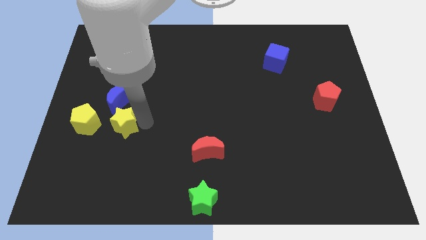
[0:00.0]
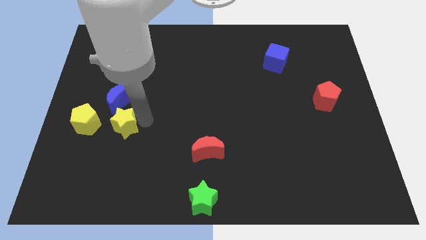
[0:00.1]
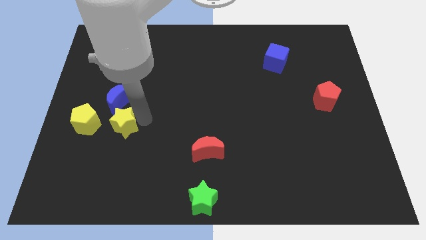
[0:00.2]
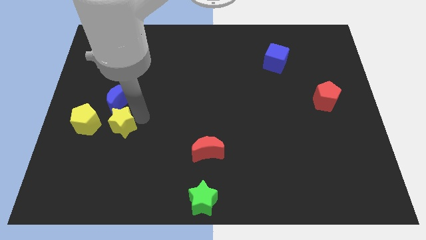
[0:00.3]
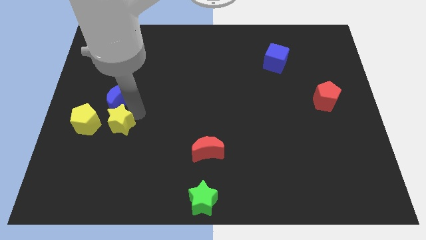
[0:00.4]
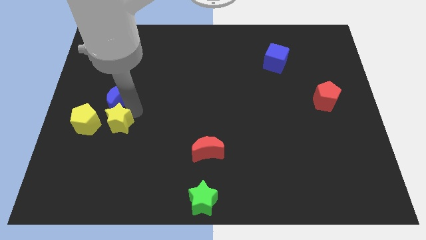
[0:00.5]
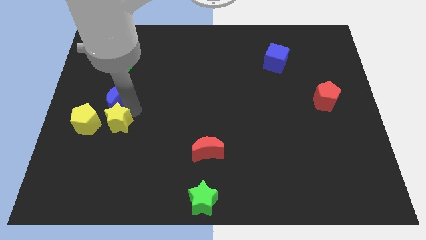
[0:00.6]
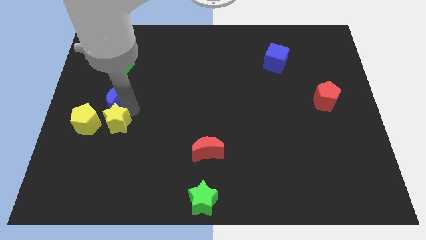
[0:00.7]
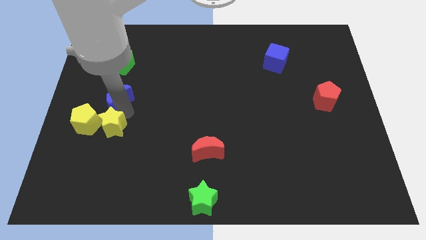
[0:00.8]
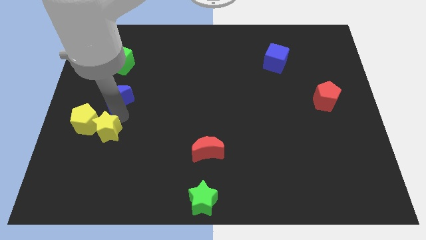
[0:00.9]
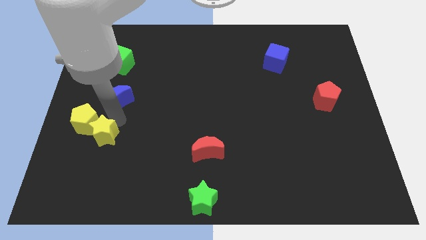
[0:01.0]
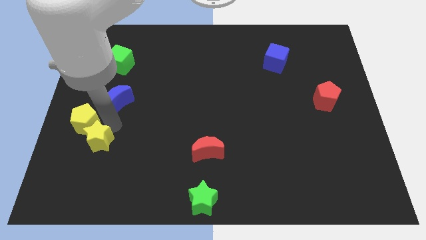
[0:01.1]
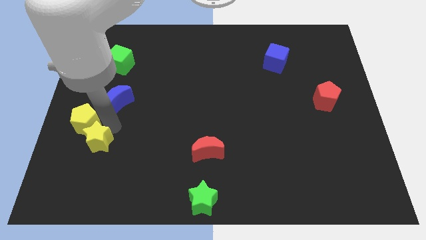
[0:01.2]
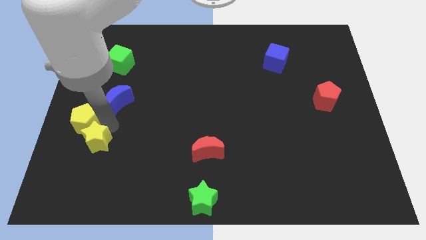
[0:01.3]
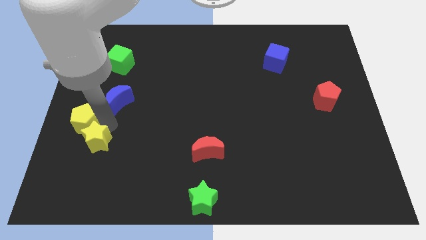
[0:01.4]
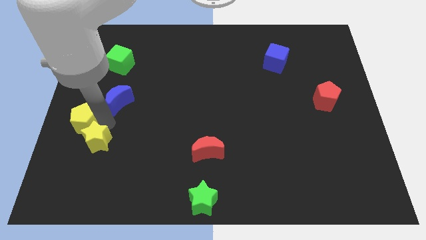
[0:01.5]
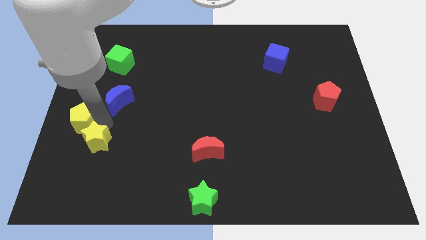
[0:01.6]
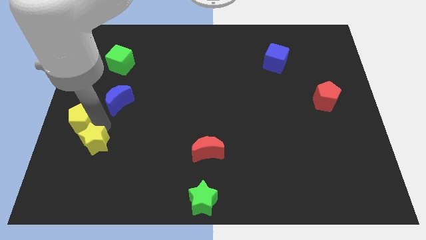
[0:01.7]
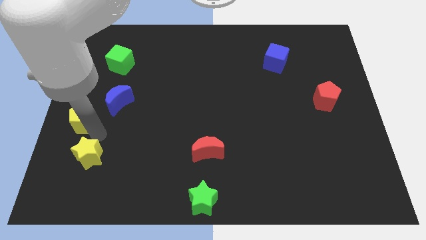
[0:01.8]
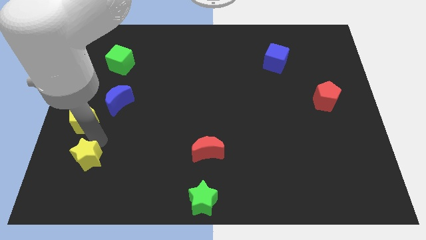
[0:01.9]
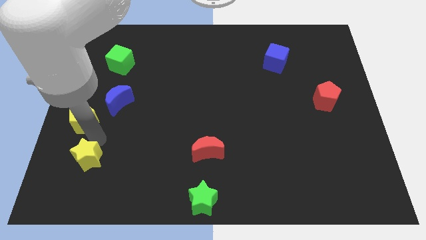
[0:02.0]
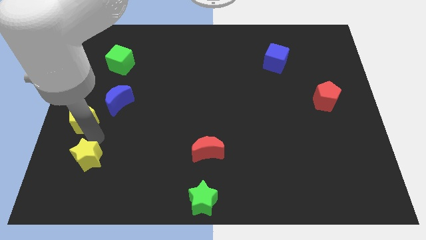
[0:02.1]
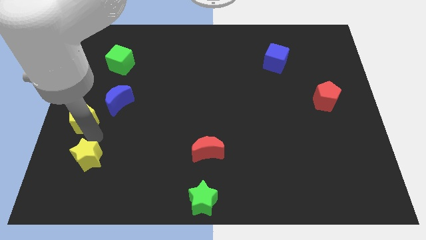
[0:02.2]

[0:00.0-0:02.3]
put the yellow star to the left of the red crescent

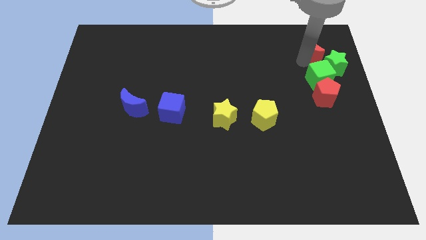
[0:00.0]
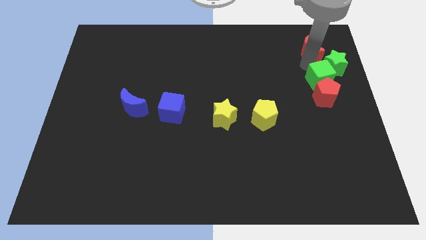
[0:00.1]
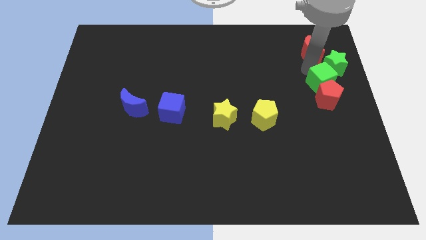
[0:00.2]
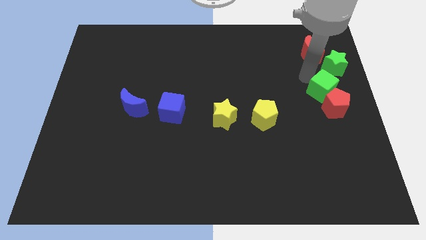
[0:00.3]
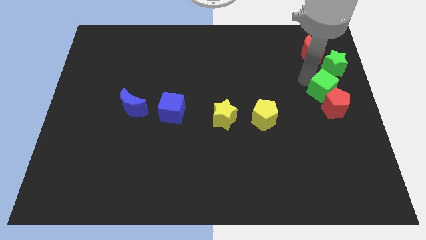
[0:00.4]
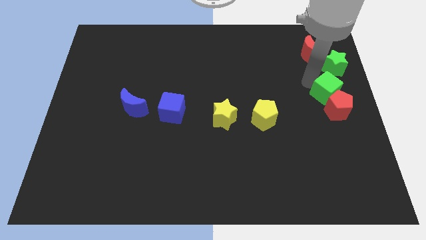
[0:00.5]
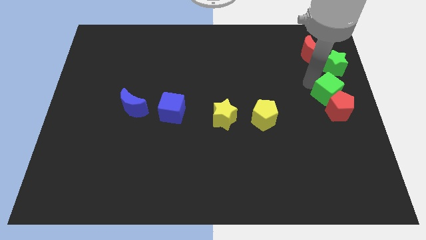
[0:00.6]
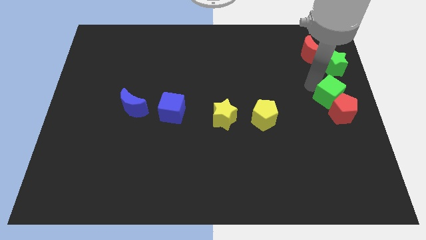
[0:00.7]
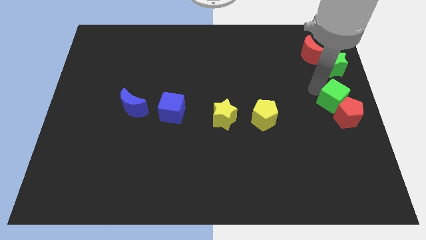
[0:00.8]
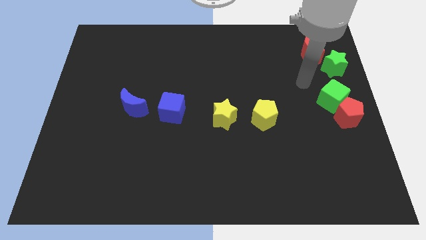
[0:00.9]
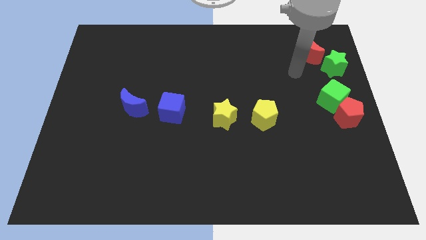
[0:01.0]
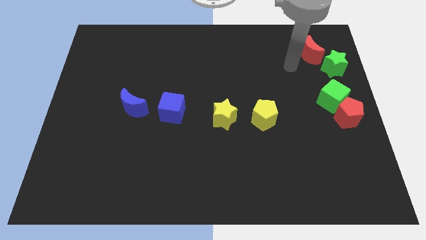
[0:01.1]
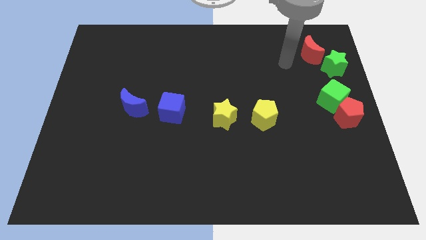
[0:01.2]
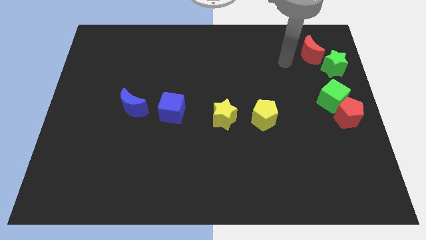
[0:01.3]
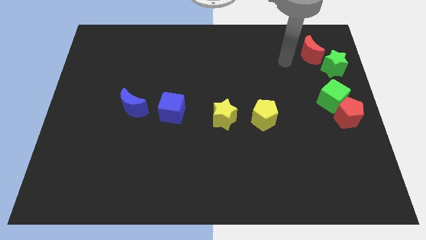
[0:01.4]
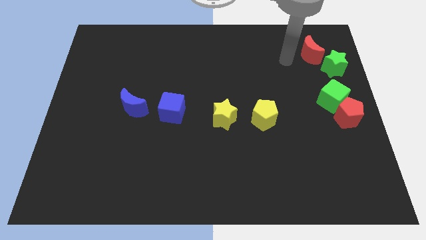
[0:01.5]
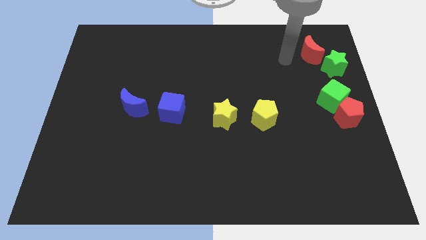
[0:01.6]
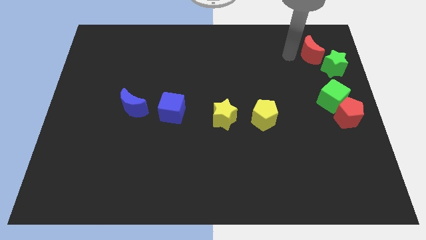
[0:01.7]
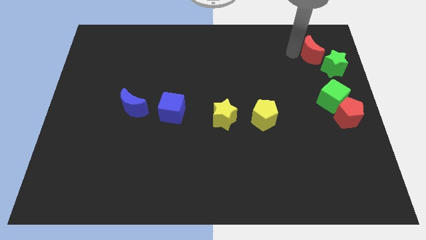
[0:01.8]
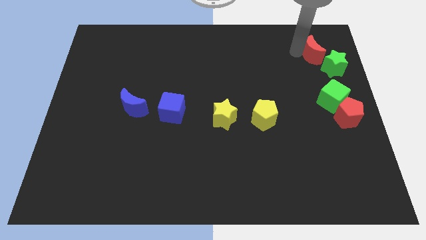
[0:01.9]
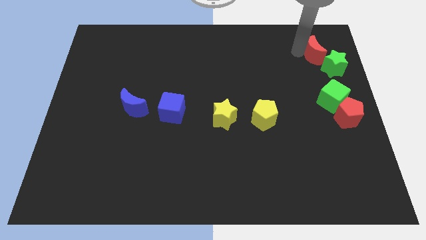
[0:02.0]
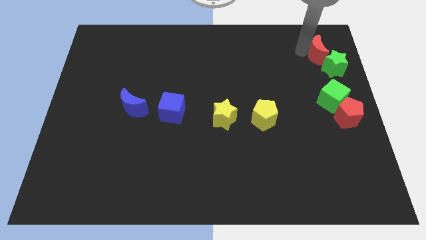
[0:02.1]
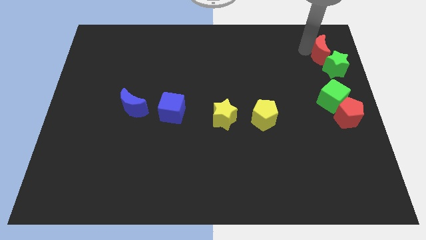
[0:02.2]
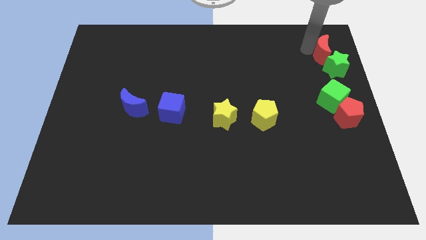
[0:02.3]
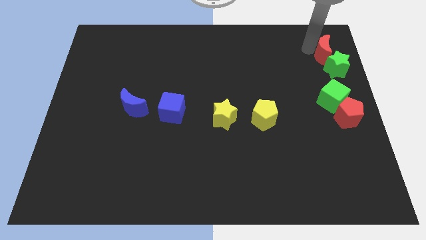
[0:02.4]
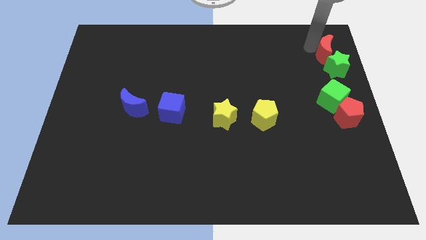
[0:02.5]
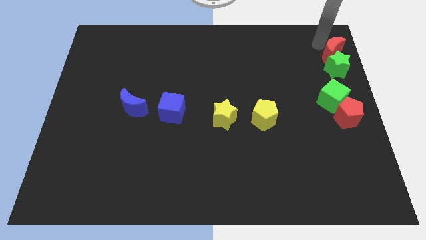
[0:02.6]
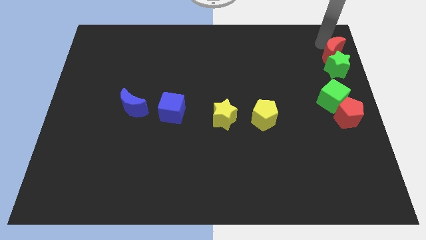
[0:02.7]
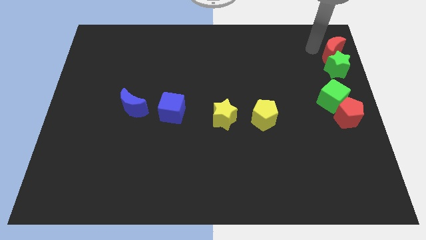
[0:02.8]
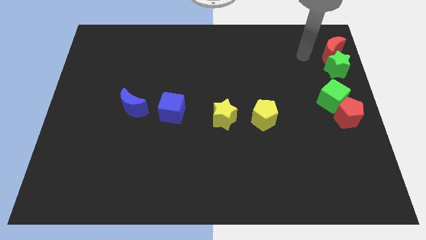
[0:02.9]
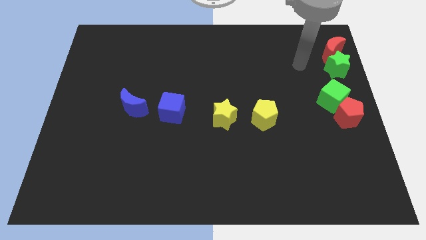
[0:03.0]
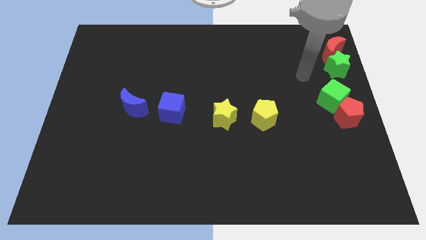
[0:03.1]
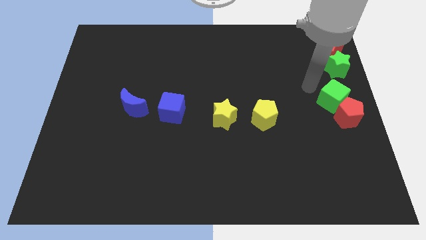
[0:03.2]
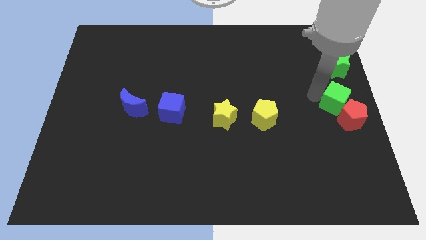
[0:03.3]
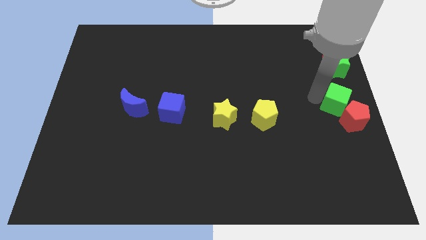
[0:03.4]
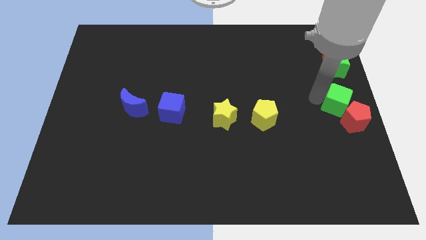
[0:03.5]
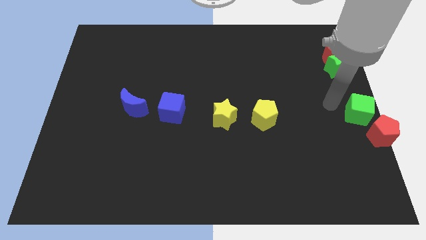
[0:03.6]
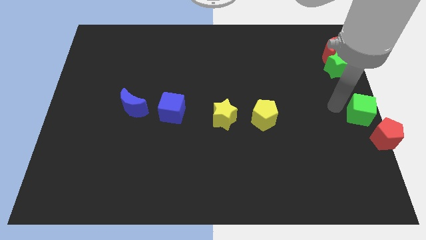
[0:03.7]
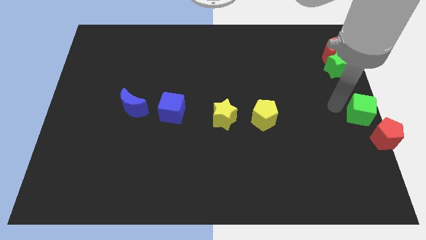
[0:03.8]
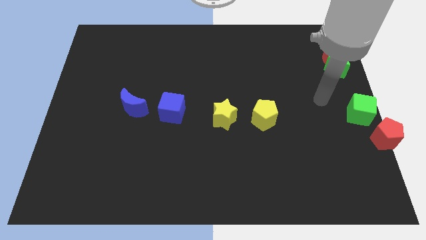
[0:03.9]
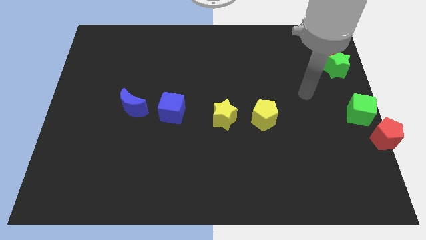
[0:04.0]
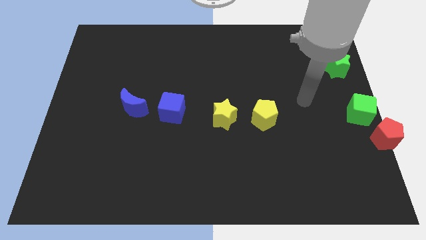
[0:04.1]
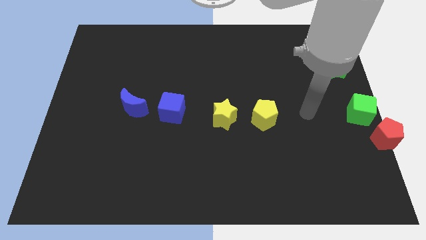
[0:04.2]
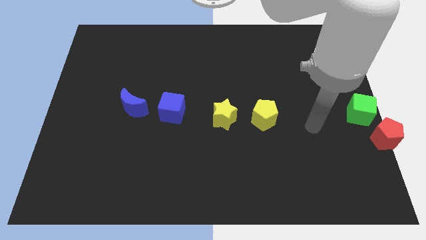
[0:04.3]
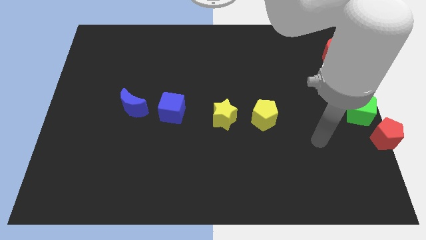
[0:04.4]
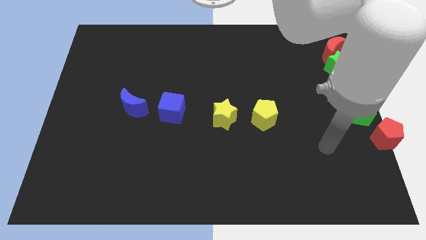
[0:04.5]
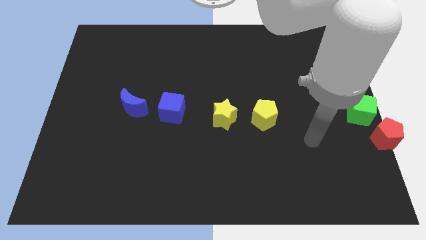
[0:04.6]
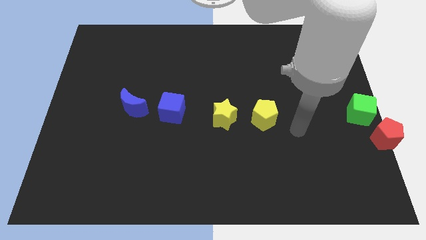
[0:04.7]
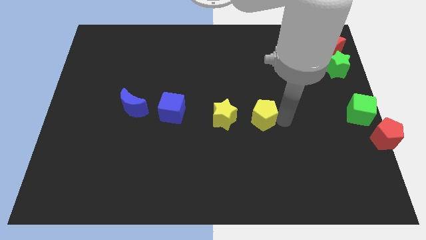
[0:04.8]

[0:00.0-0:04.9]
separate the red pentagon and green cube from the red crescent and green star

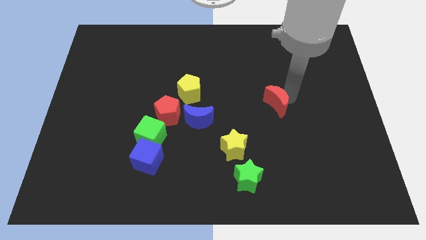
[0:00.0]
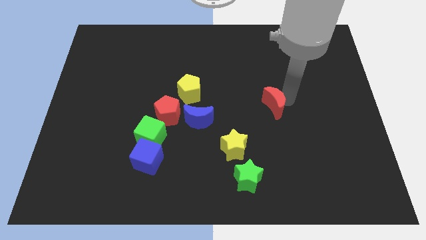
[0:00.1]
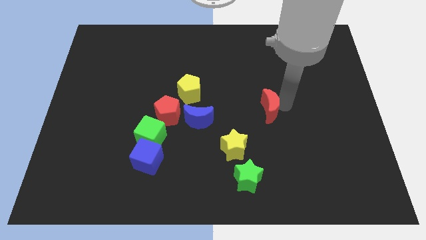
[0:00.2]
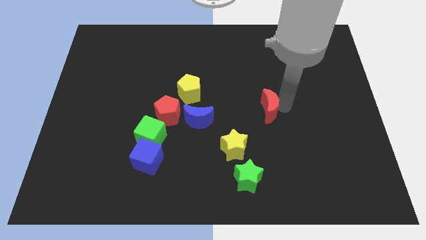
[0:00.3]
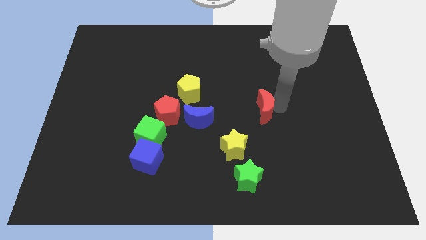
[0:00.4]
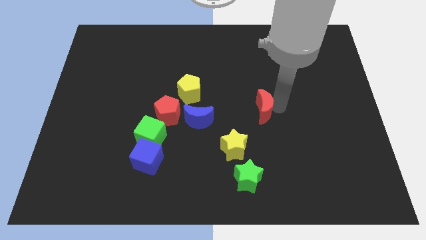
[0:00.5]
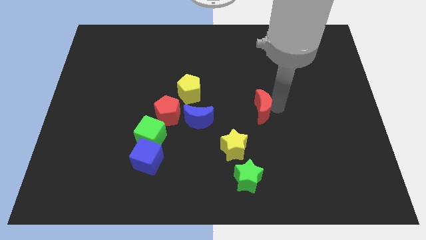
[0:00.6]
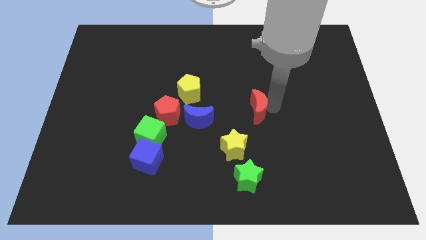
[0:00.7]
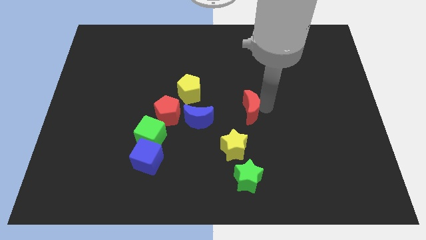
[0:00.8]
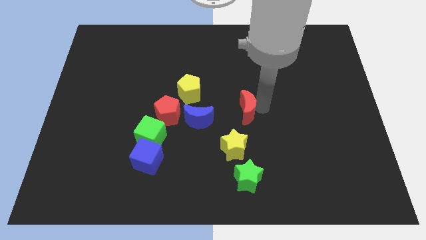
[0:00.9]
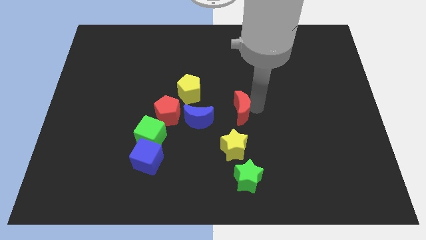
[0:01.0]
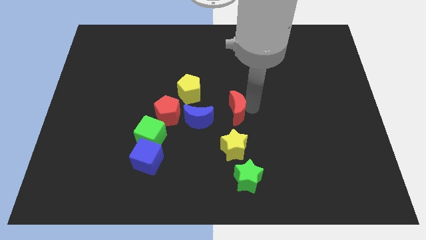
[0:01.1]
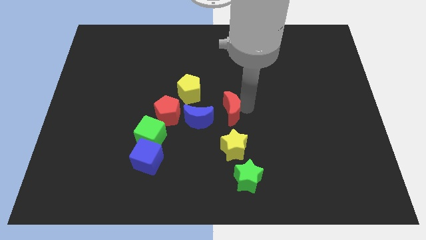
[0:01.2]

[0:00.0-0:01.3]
push the red crescent to the top of the yellow star

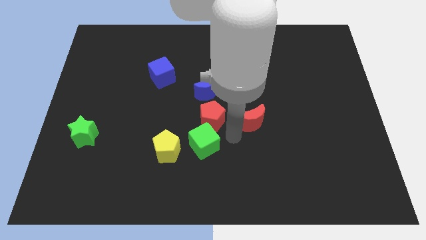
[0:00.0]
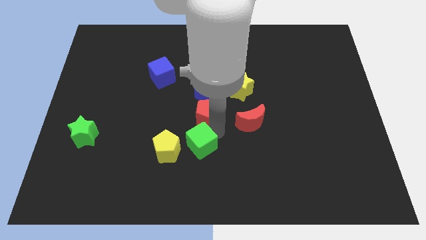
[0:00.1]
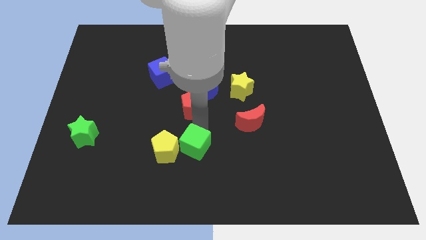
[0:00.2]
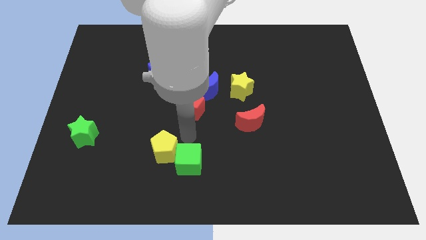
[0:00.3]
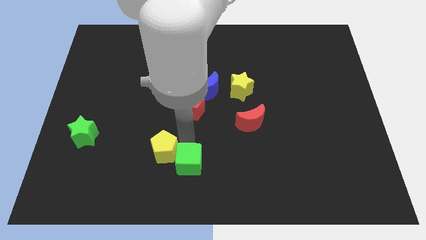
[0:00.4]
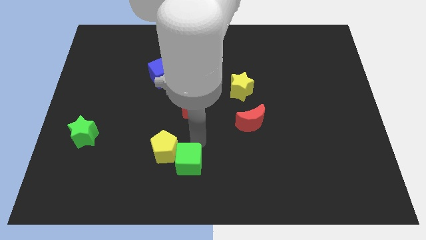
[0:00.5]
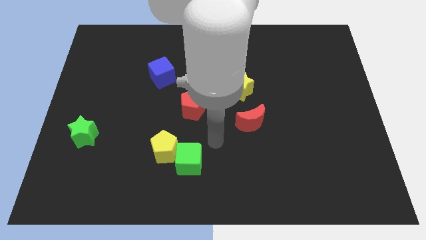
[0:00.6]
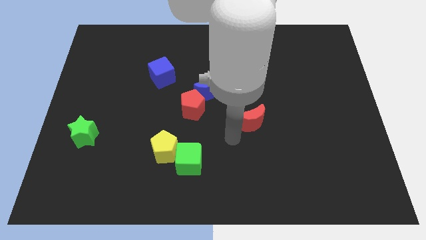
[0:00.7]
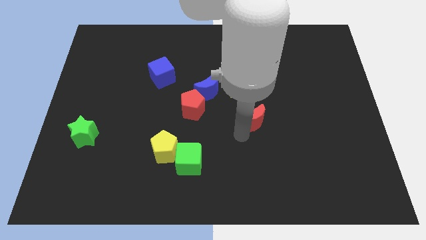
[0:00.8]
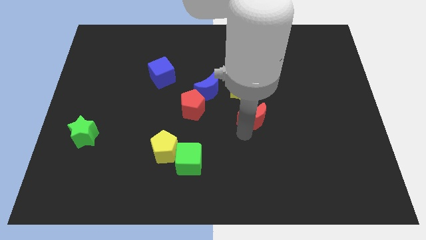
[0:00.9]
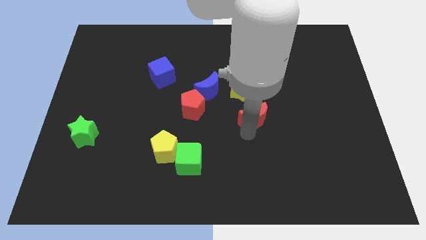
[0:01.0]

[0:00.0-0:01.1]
separate green cube and red pentagon
